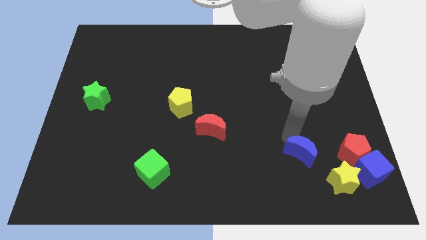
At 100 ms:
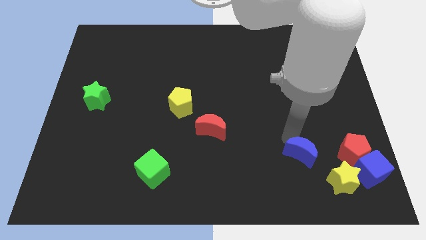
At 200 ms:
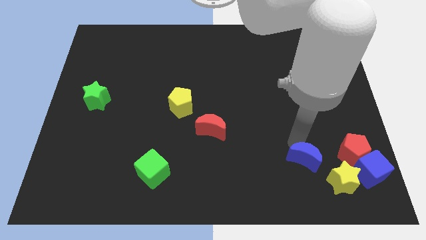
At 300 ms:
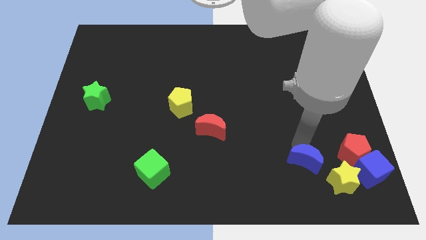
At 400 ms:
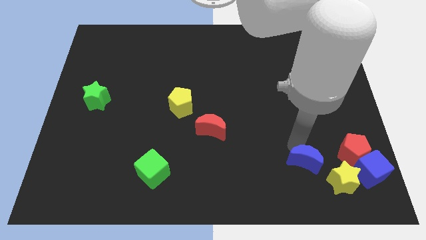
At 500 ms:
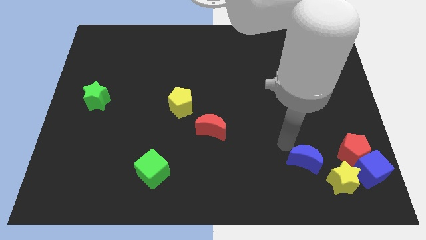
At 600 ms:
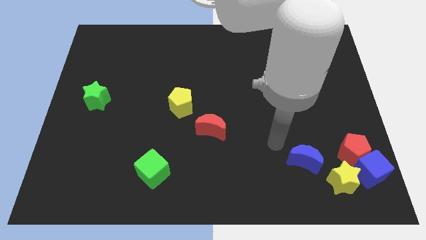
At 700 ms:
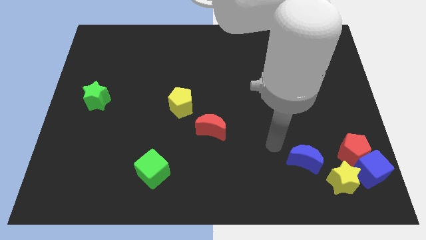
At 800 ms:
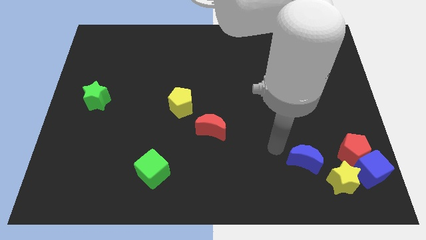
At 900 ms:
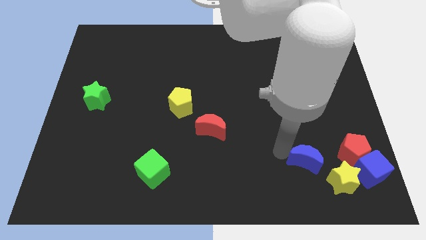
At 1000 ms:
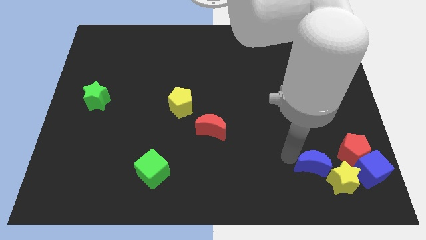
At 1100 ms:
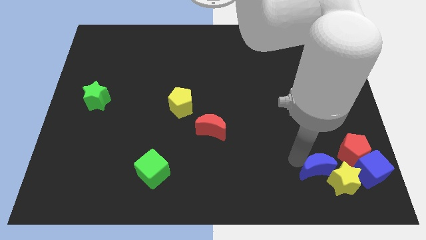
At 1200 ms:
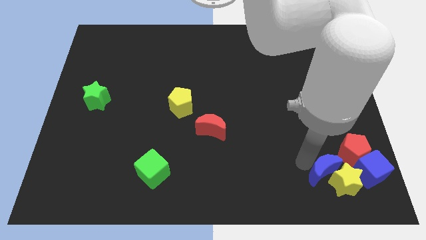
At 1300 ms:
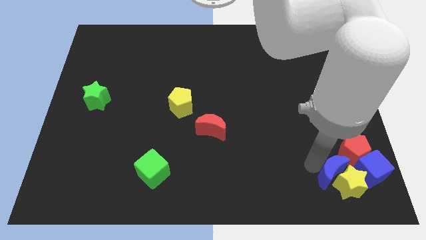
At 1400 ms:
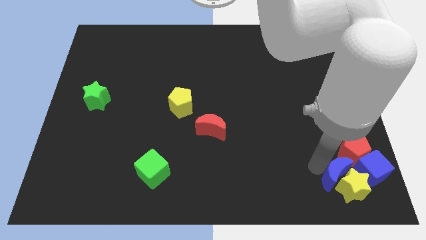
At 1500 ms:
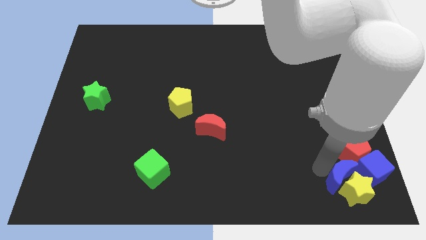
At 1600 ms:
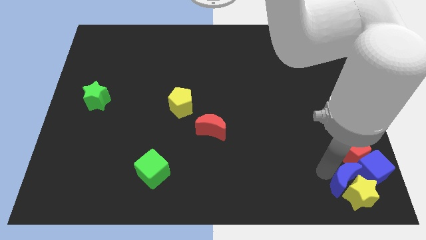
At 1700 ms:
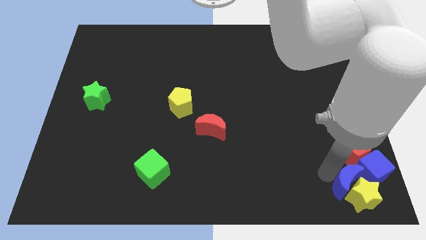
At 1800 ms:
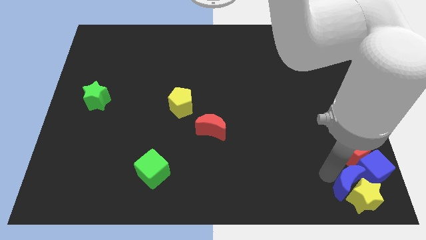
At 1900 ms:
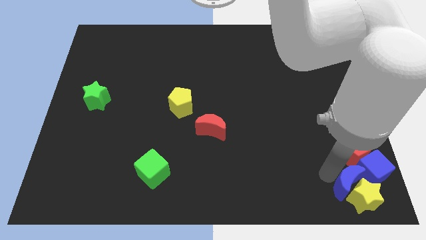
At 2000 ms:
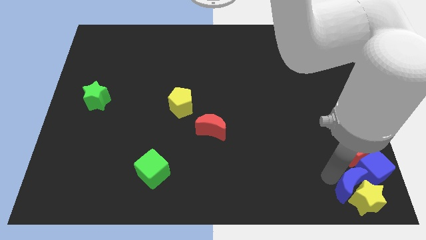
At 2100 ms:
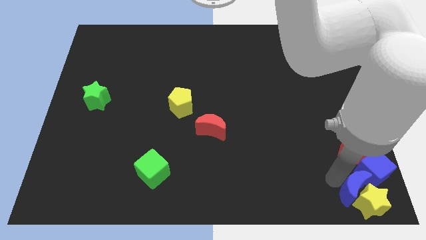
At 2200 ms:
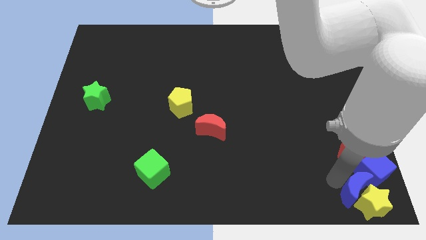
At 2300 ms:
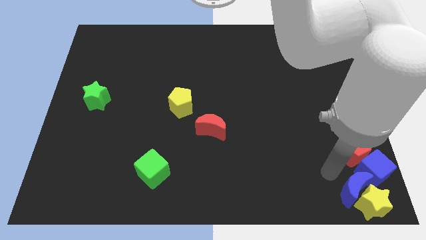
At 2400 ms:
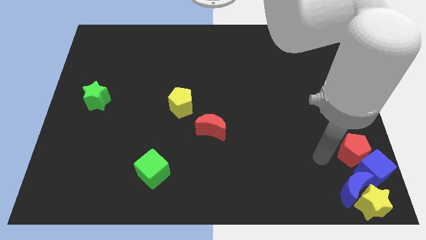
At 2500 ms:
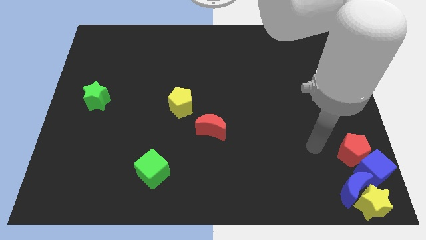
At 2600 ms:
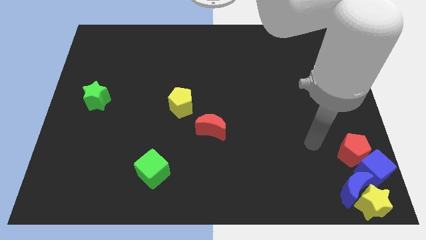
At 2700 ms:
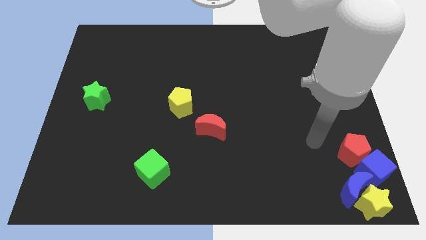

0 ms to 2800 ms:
slide the blue moon and yellow star towards the bottom right corner

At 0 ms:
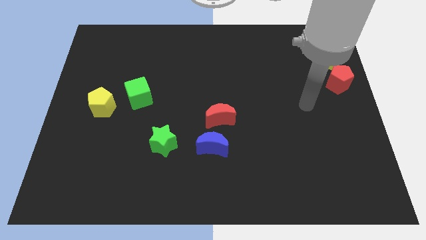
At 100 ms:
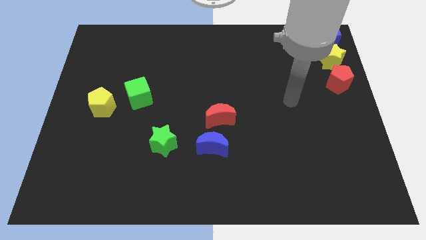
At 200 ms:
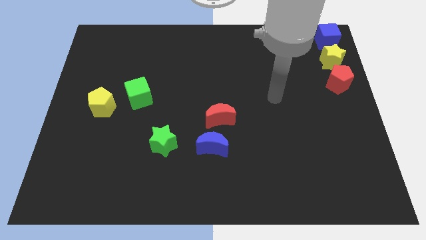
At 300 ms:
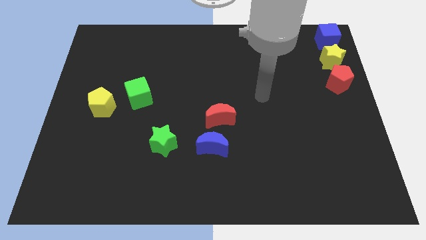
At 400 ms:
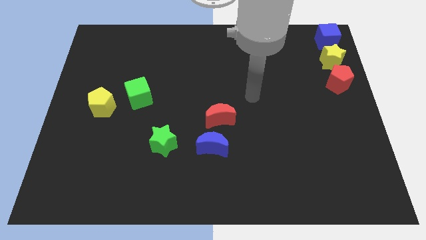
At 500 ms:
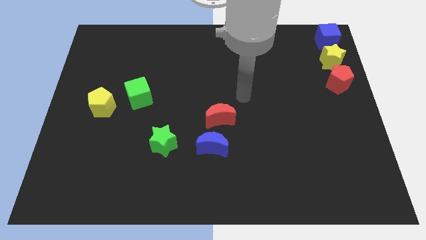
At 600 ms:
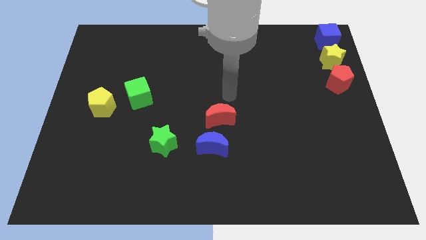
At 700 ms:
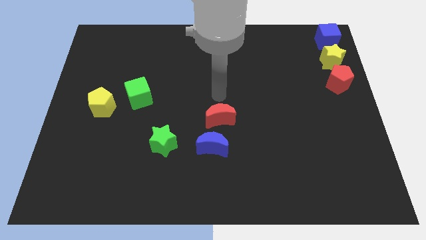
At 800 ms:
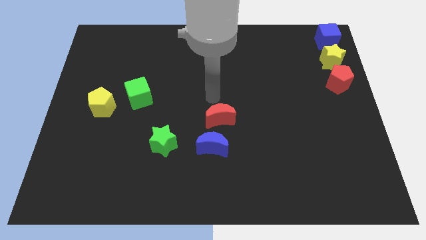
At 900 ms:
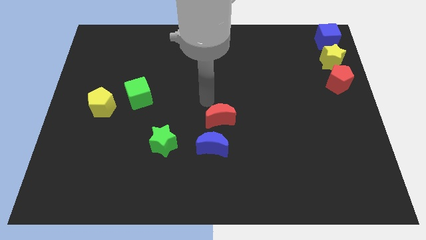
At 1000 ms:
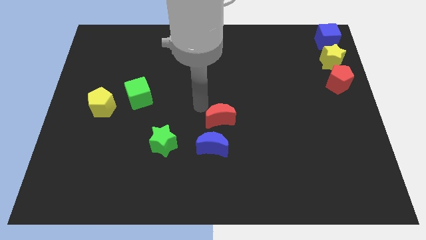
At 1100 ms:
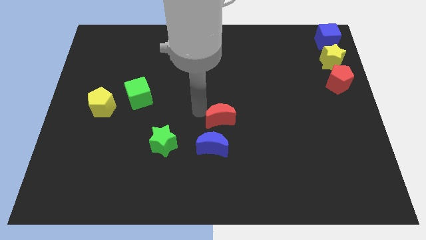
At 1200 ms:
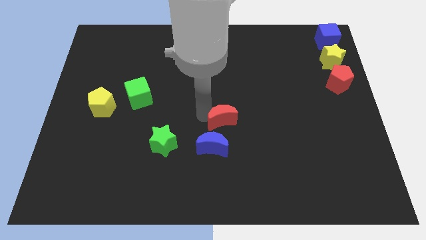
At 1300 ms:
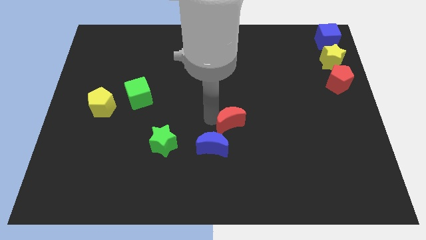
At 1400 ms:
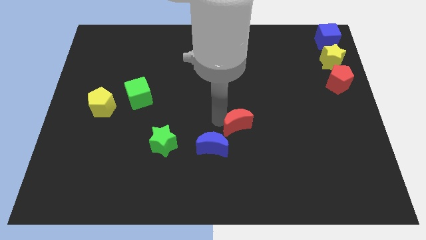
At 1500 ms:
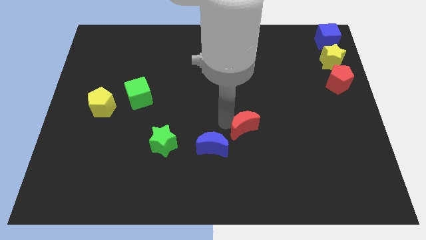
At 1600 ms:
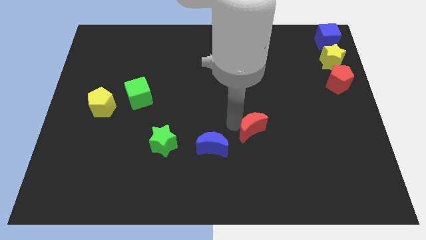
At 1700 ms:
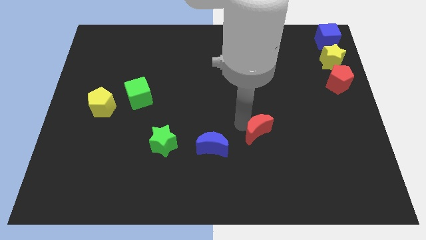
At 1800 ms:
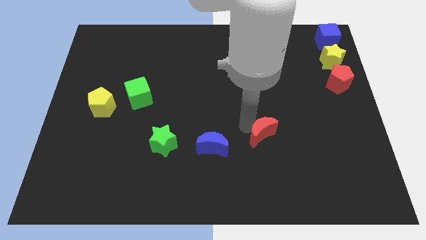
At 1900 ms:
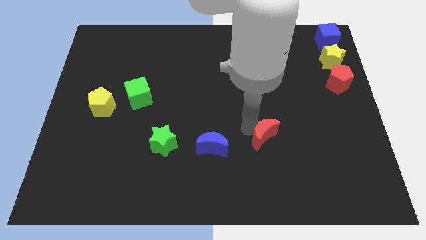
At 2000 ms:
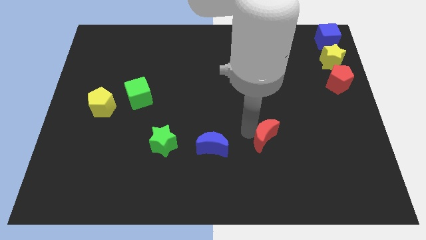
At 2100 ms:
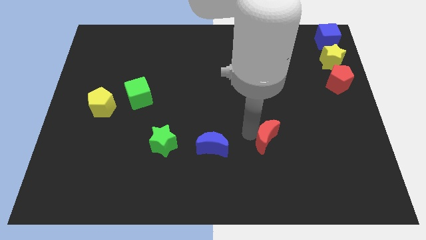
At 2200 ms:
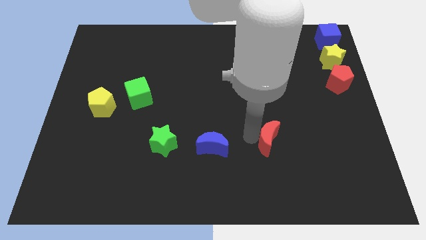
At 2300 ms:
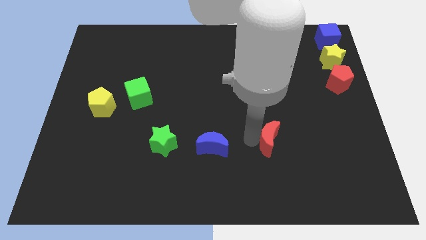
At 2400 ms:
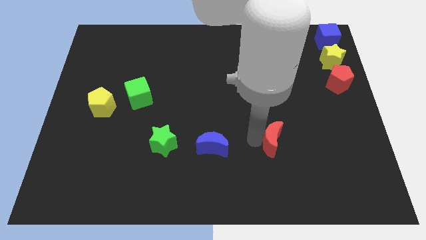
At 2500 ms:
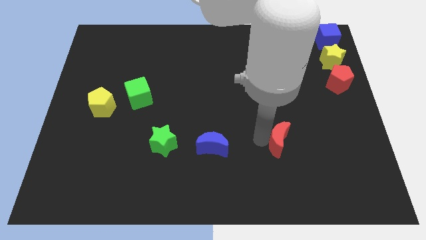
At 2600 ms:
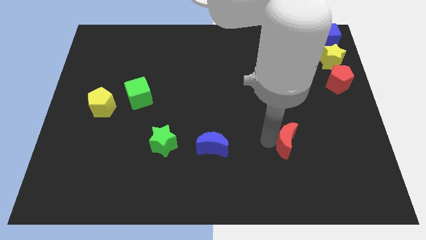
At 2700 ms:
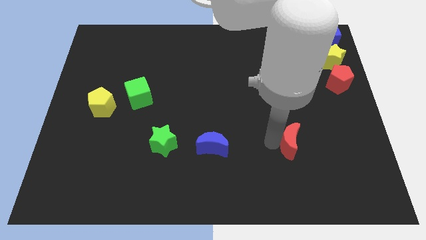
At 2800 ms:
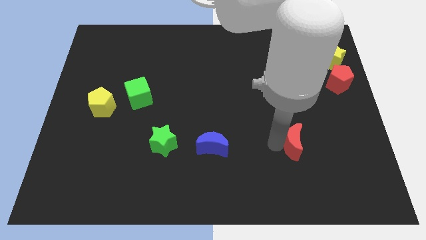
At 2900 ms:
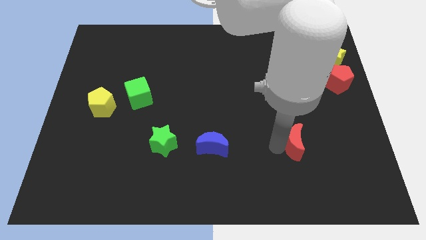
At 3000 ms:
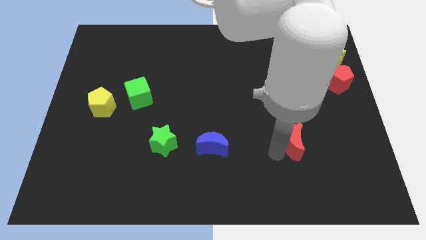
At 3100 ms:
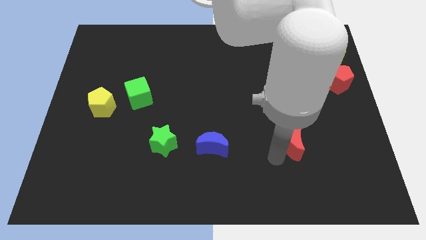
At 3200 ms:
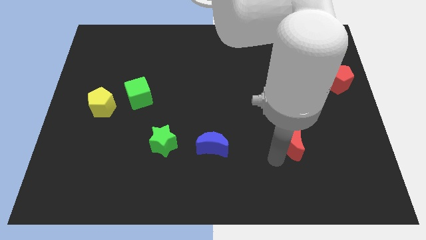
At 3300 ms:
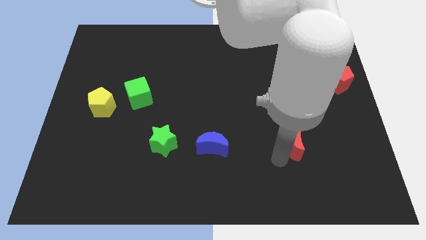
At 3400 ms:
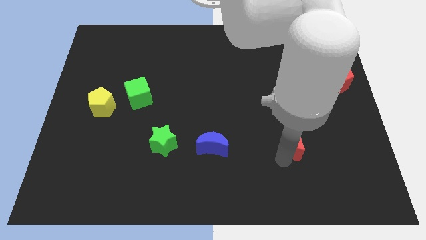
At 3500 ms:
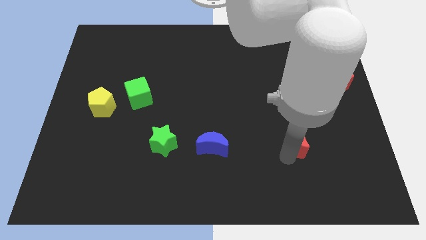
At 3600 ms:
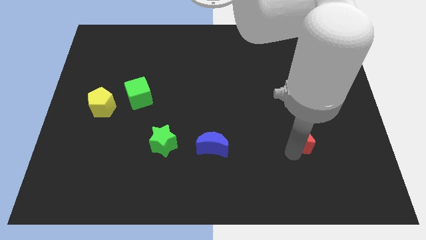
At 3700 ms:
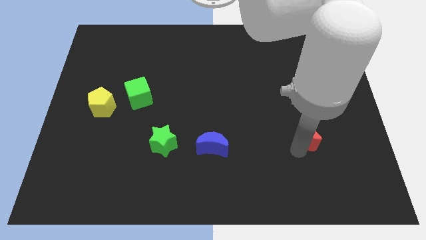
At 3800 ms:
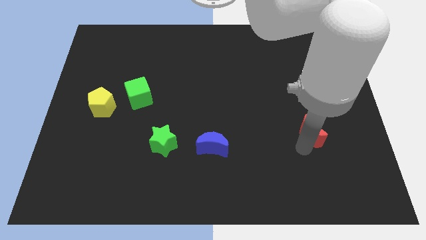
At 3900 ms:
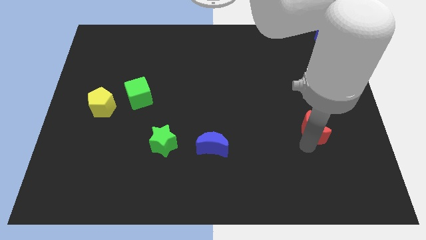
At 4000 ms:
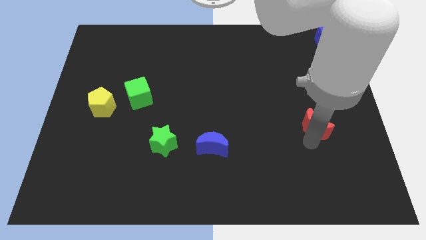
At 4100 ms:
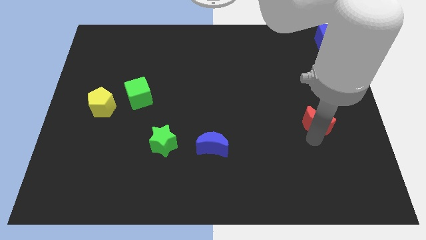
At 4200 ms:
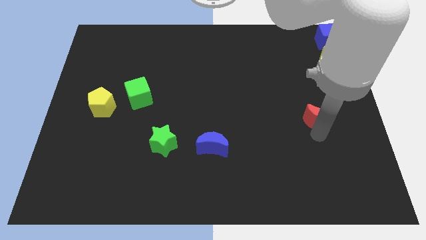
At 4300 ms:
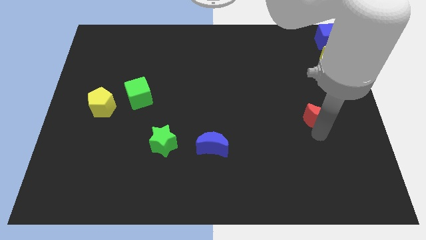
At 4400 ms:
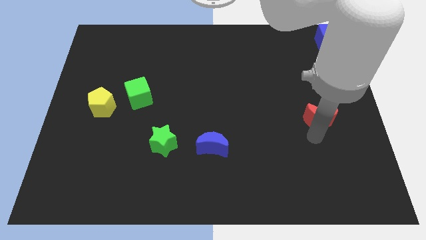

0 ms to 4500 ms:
drag the red moon towards the center right

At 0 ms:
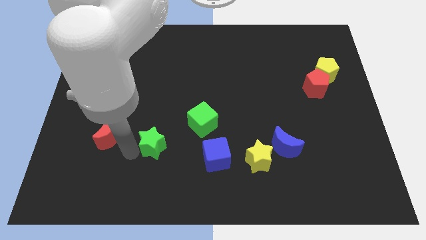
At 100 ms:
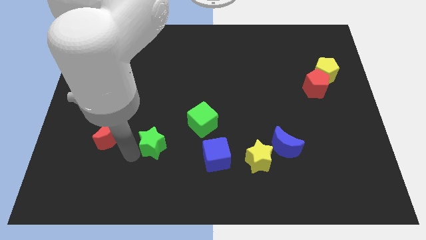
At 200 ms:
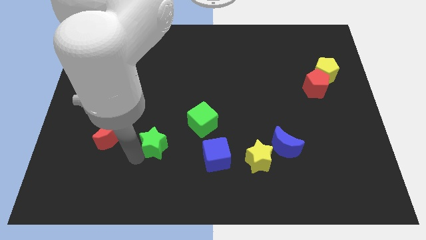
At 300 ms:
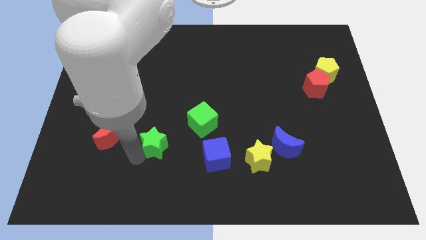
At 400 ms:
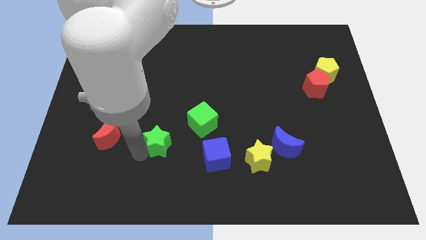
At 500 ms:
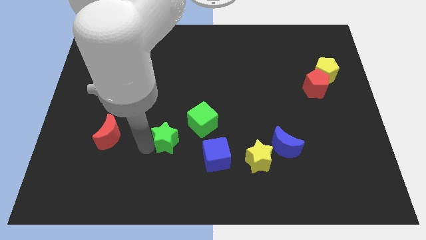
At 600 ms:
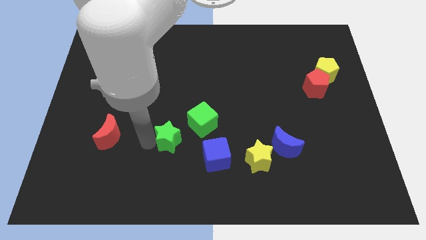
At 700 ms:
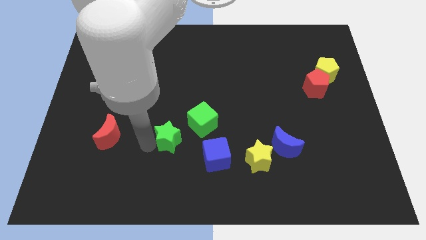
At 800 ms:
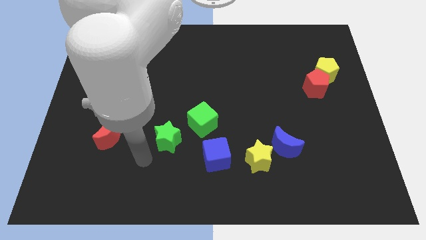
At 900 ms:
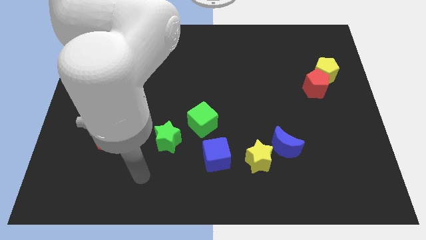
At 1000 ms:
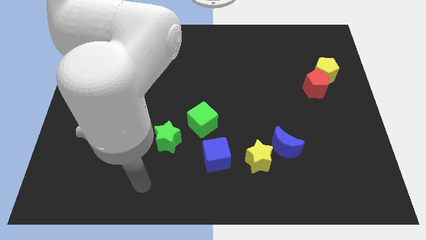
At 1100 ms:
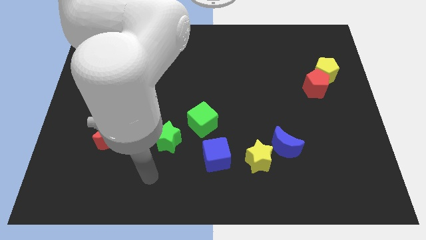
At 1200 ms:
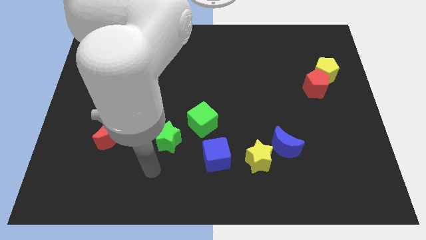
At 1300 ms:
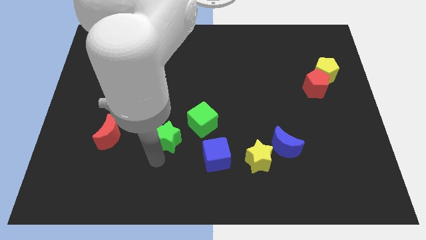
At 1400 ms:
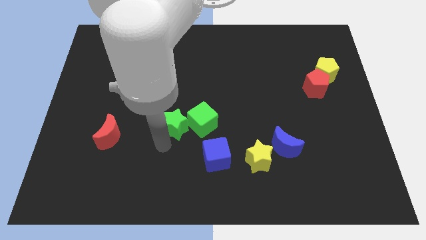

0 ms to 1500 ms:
move the green star into the green cube

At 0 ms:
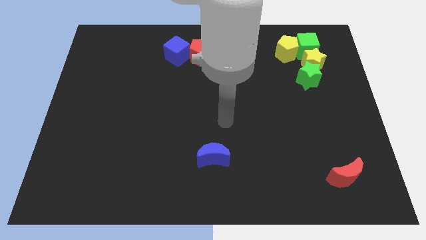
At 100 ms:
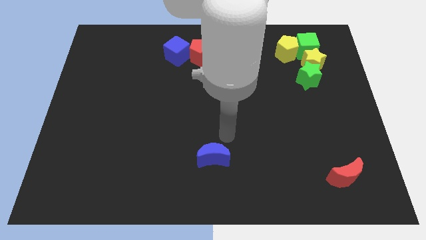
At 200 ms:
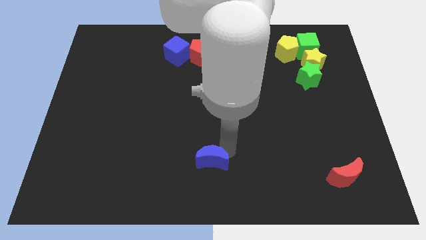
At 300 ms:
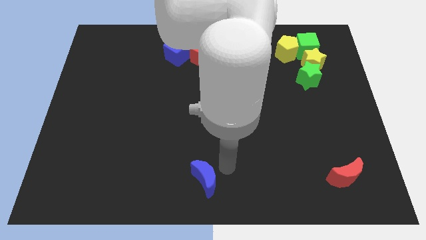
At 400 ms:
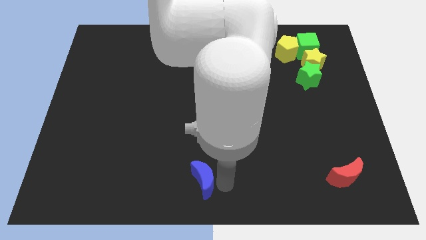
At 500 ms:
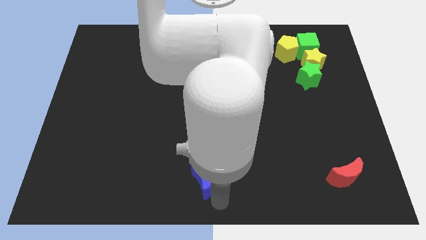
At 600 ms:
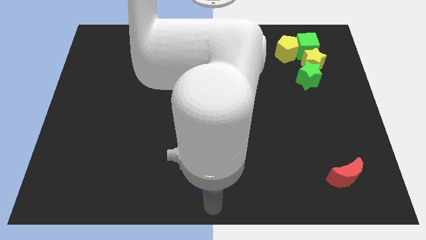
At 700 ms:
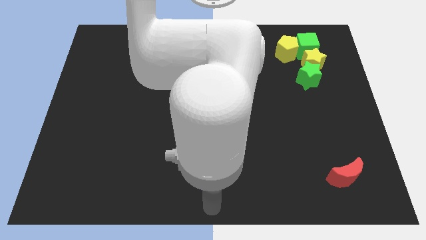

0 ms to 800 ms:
push the blue crescent to the bottom center of the board
